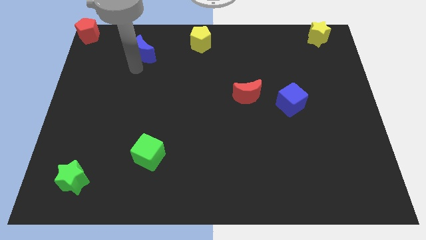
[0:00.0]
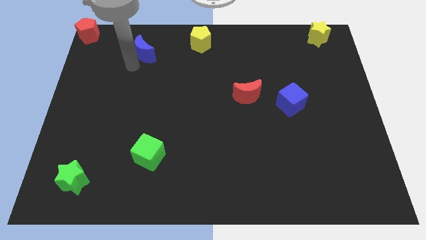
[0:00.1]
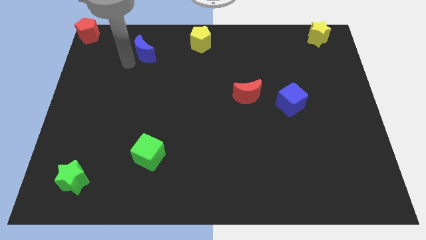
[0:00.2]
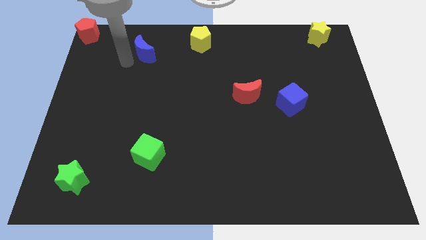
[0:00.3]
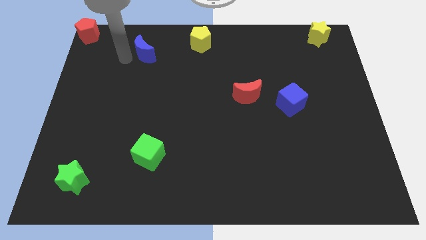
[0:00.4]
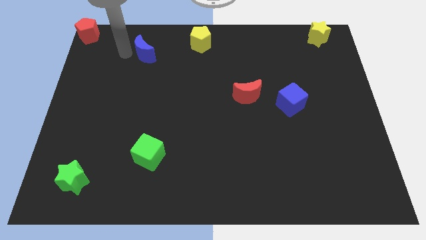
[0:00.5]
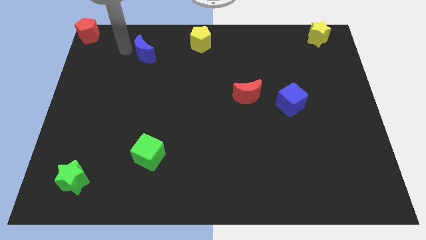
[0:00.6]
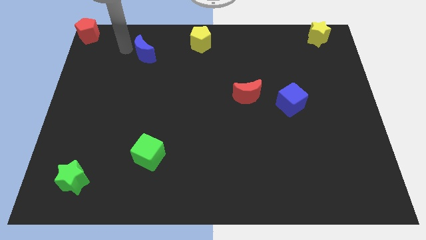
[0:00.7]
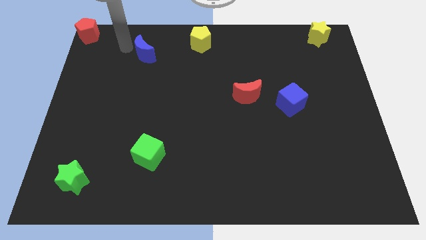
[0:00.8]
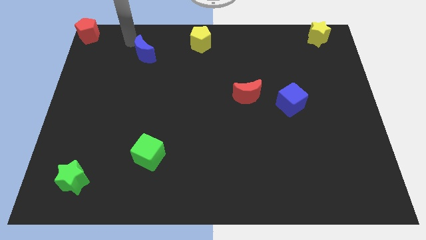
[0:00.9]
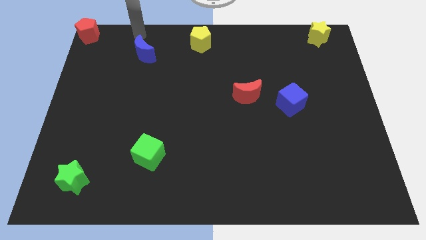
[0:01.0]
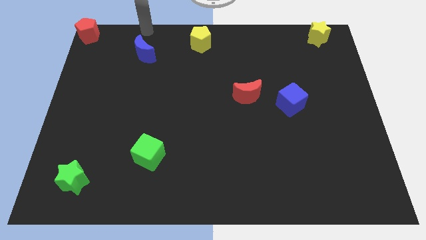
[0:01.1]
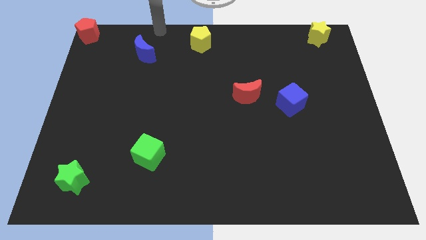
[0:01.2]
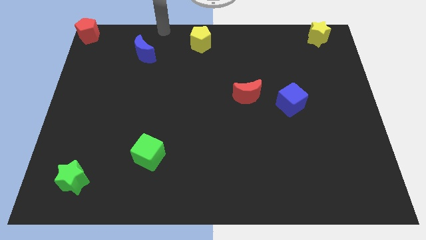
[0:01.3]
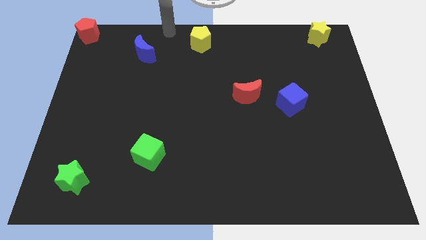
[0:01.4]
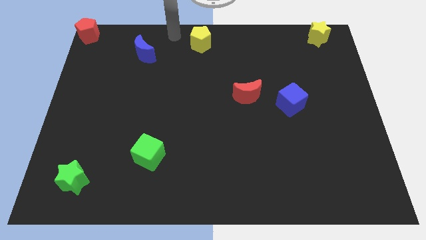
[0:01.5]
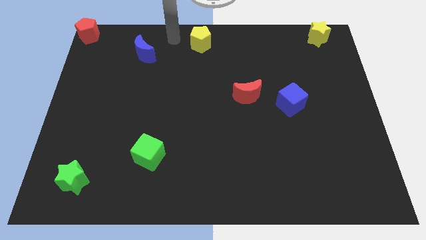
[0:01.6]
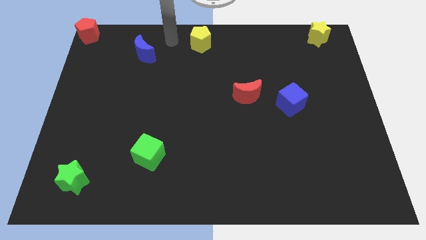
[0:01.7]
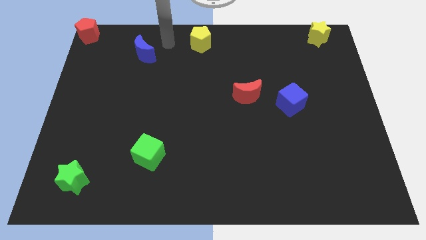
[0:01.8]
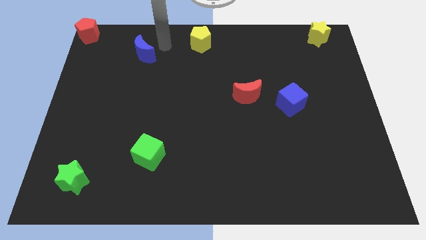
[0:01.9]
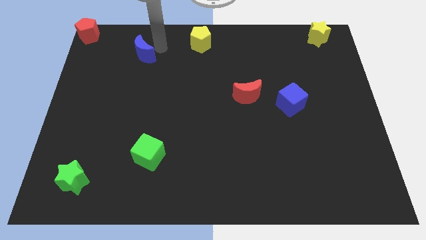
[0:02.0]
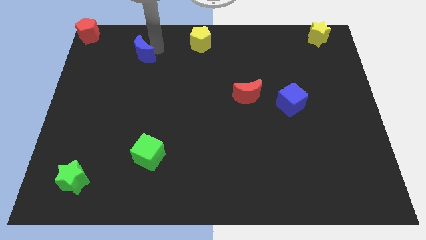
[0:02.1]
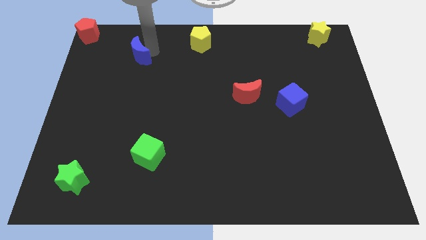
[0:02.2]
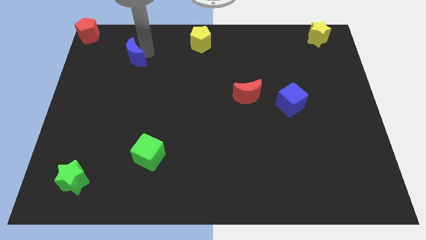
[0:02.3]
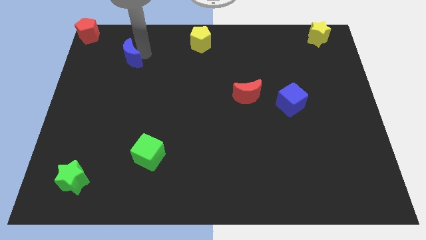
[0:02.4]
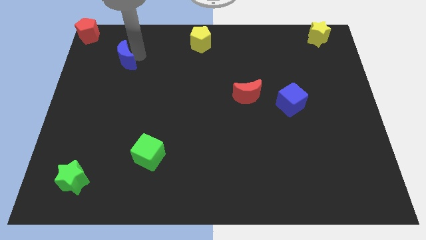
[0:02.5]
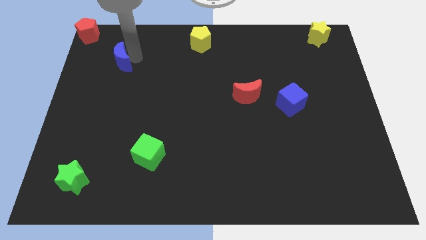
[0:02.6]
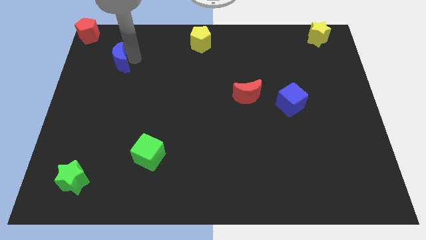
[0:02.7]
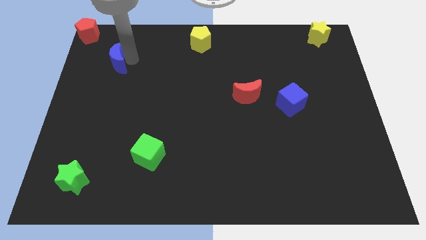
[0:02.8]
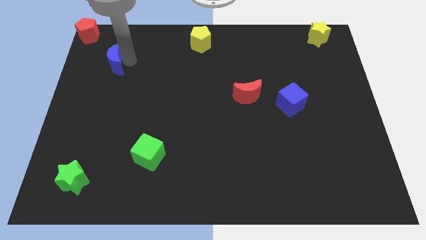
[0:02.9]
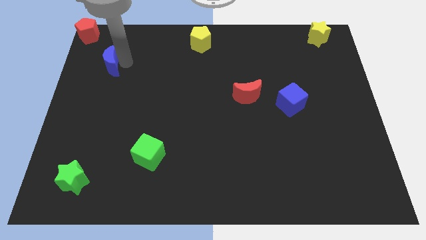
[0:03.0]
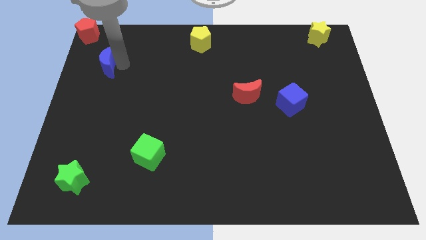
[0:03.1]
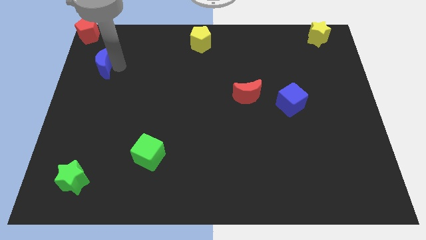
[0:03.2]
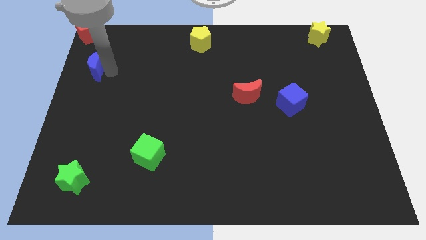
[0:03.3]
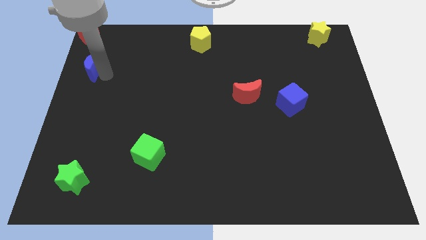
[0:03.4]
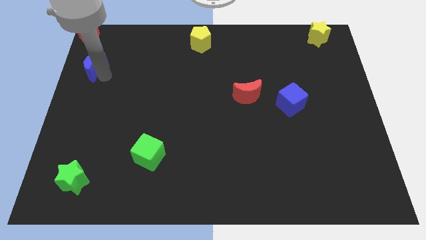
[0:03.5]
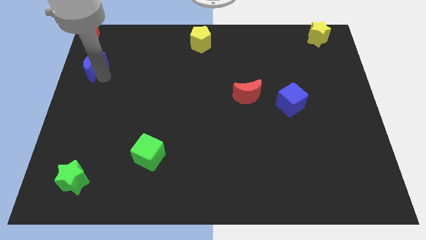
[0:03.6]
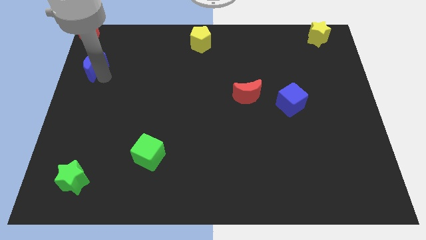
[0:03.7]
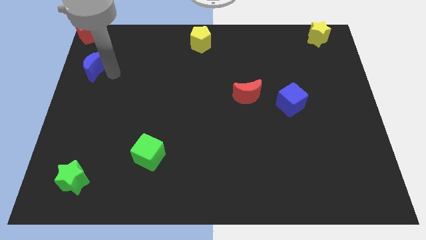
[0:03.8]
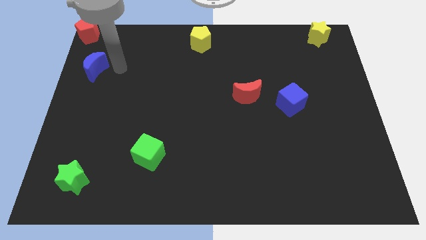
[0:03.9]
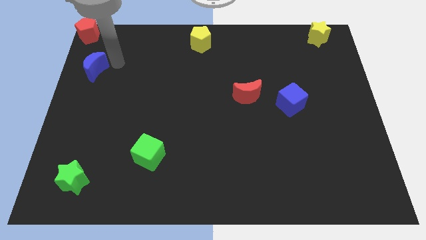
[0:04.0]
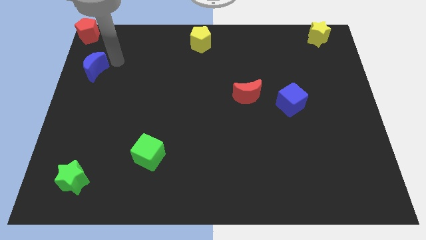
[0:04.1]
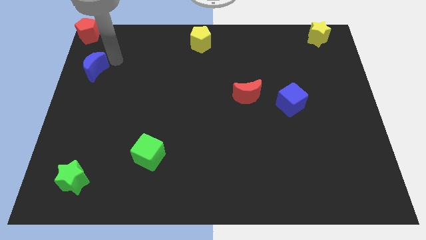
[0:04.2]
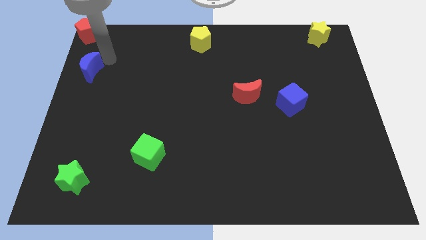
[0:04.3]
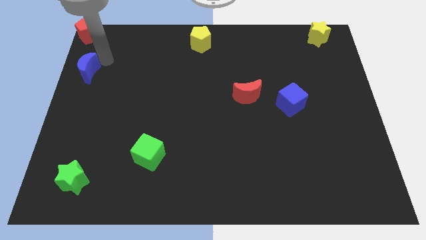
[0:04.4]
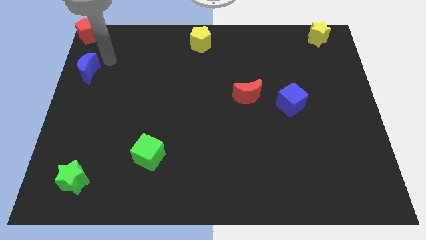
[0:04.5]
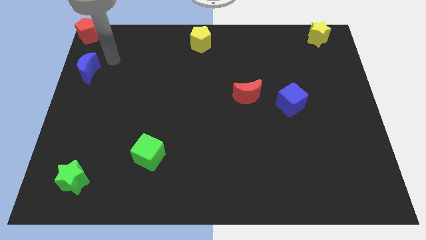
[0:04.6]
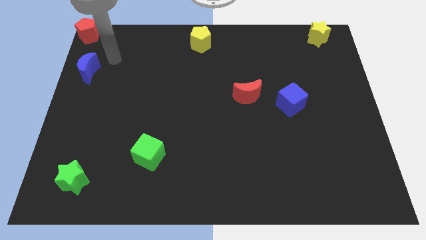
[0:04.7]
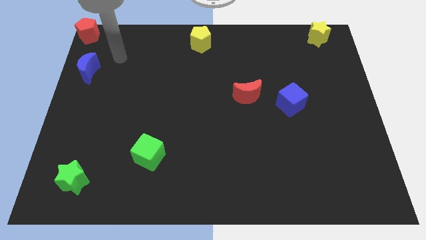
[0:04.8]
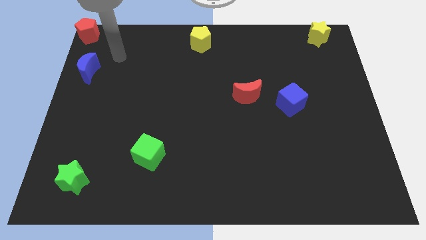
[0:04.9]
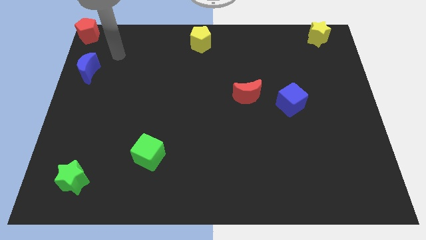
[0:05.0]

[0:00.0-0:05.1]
put the blue moon vertically below the red pentagon

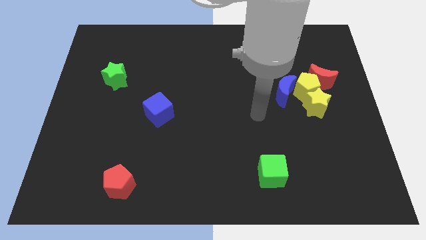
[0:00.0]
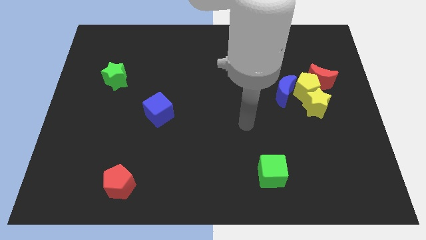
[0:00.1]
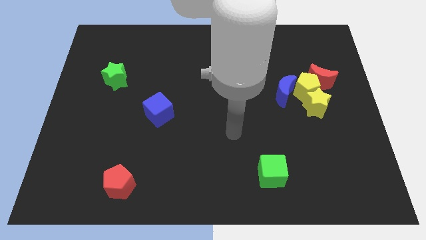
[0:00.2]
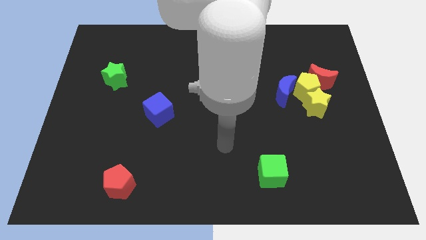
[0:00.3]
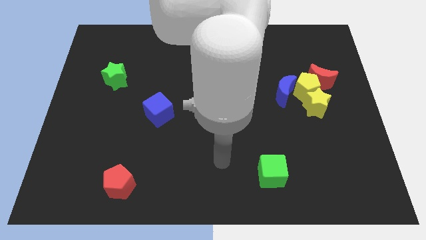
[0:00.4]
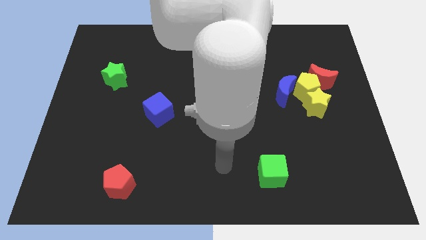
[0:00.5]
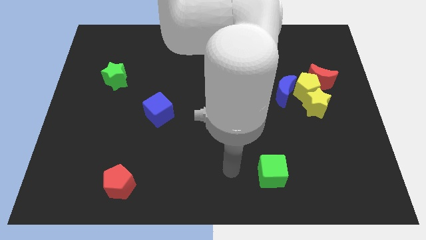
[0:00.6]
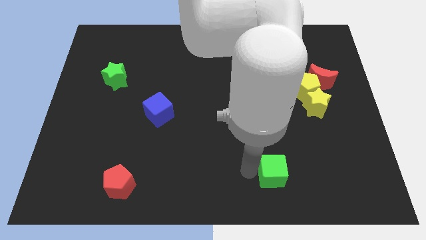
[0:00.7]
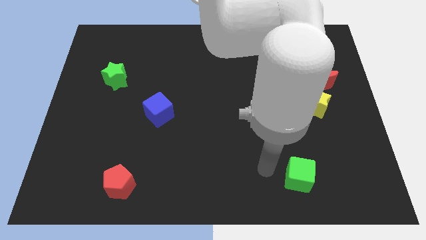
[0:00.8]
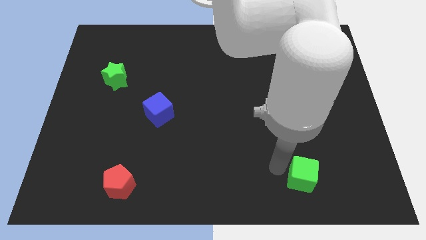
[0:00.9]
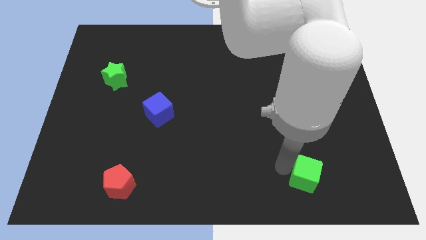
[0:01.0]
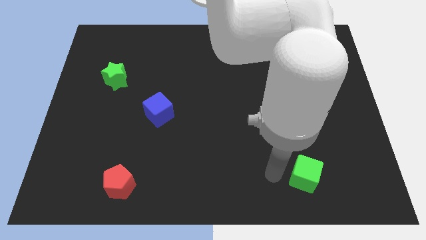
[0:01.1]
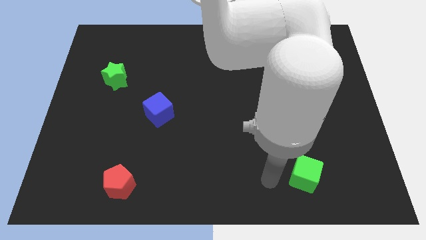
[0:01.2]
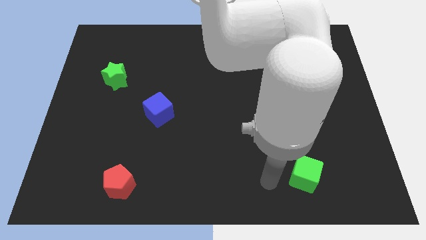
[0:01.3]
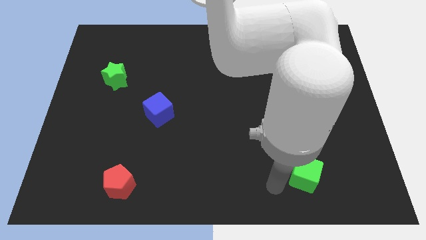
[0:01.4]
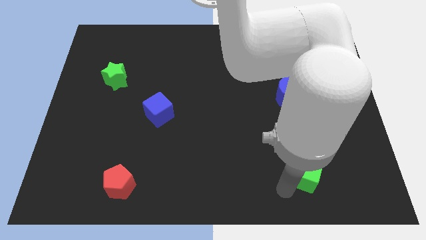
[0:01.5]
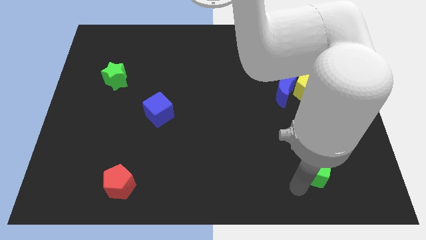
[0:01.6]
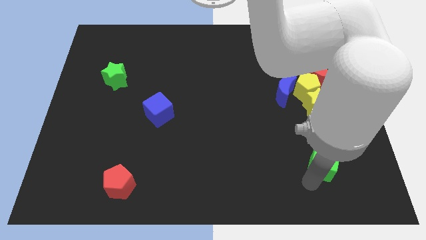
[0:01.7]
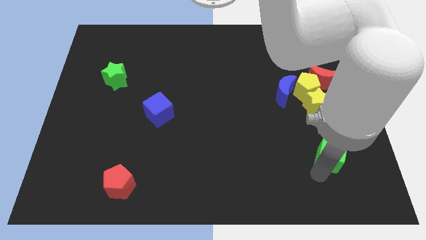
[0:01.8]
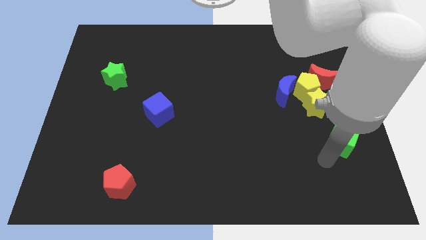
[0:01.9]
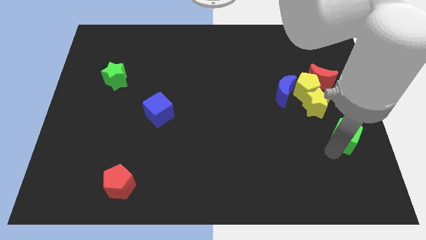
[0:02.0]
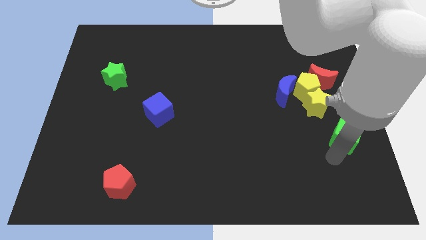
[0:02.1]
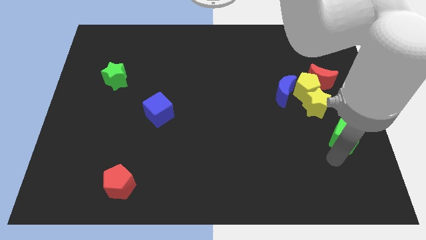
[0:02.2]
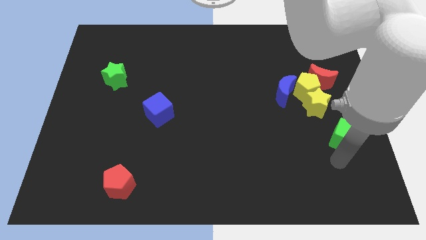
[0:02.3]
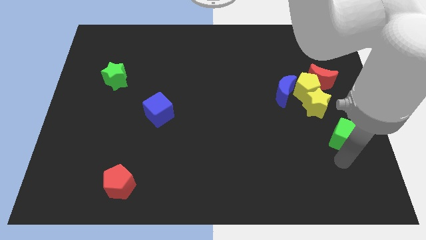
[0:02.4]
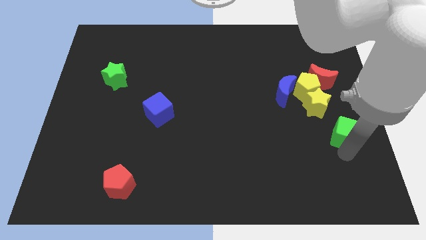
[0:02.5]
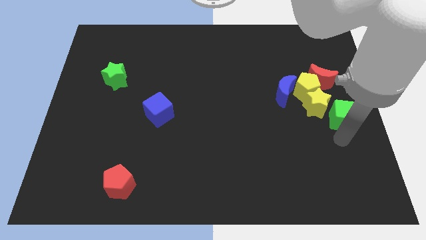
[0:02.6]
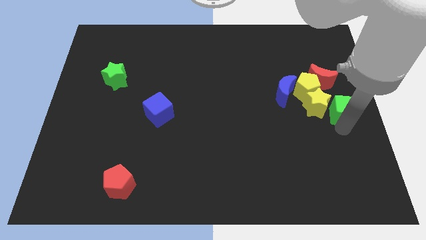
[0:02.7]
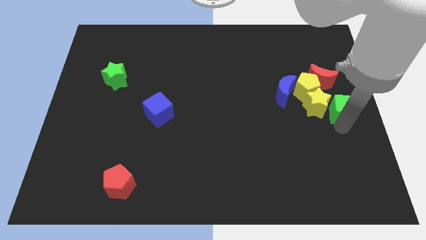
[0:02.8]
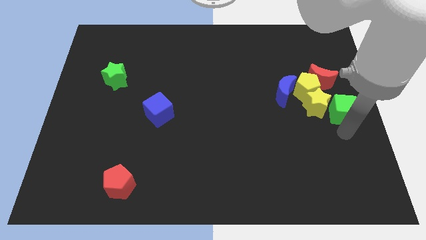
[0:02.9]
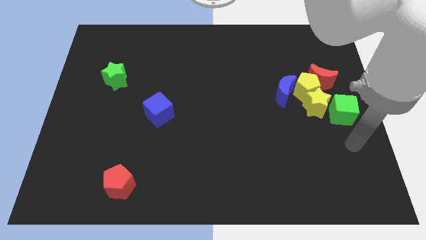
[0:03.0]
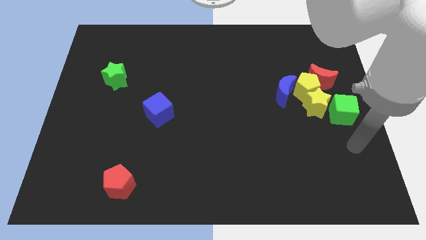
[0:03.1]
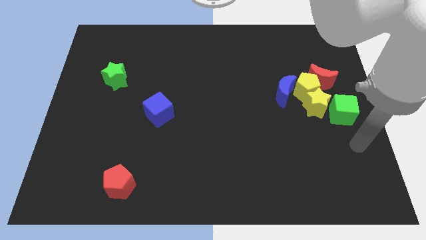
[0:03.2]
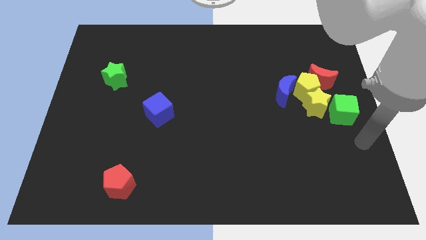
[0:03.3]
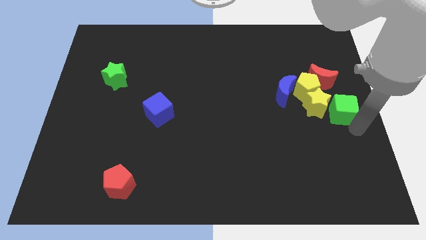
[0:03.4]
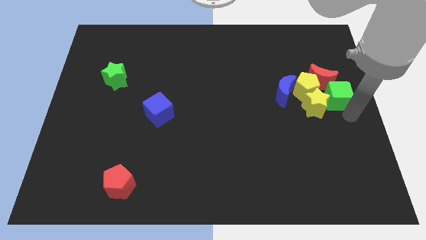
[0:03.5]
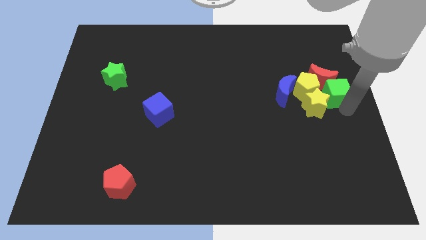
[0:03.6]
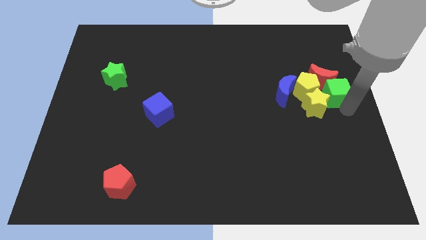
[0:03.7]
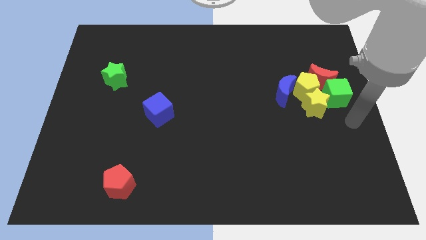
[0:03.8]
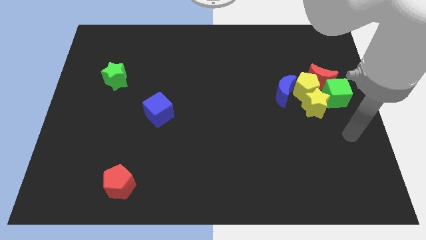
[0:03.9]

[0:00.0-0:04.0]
place th egreen cube below into red moon
